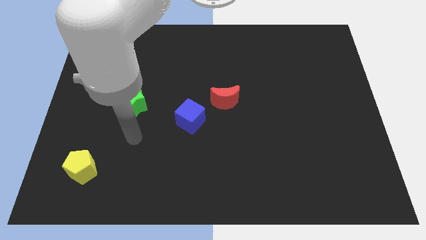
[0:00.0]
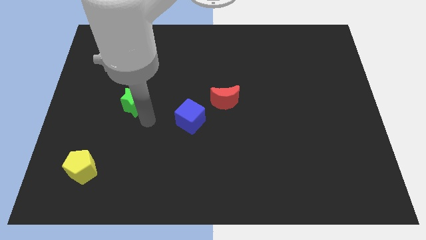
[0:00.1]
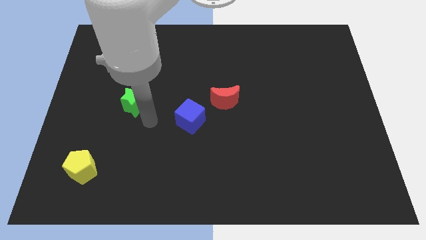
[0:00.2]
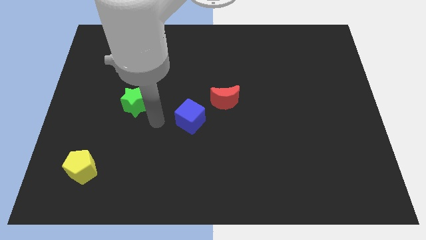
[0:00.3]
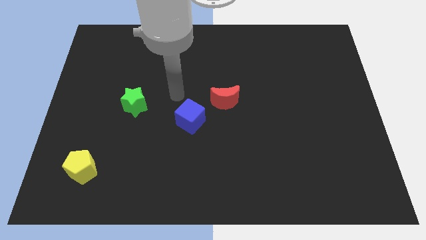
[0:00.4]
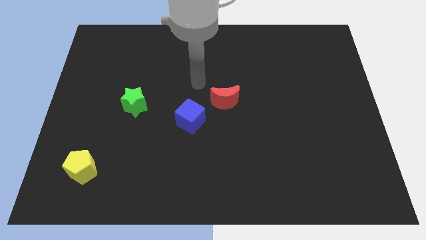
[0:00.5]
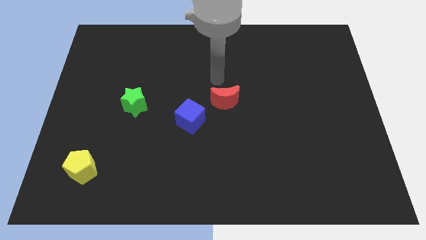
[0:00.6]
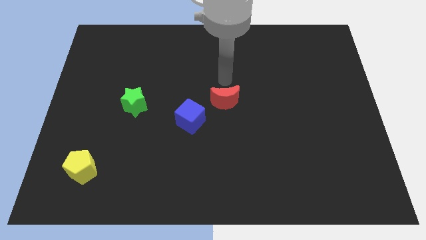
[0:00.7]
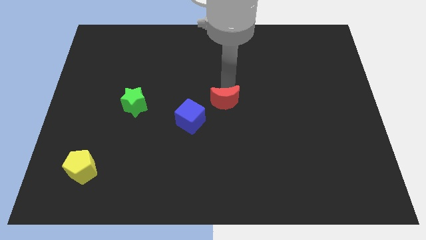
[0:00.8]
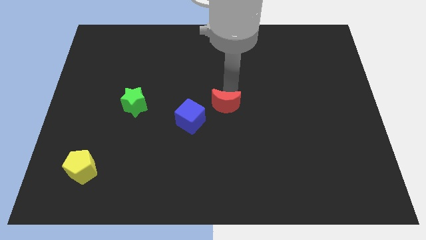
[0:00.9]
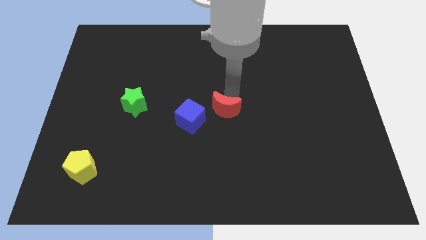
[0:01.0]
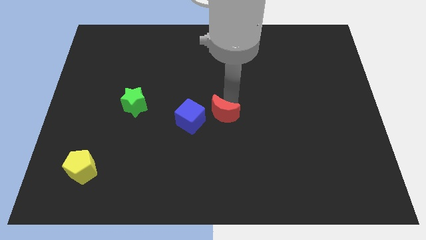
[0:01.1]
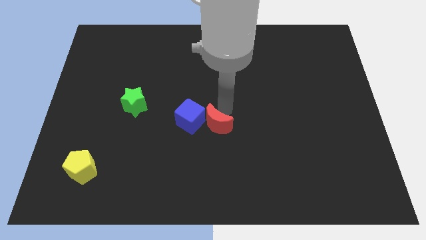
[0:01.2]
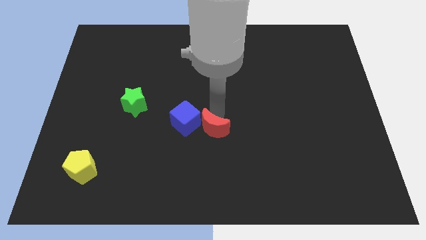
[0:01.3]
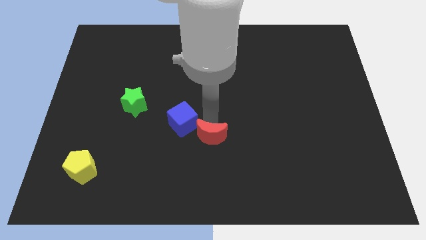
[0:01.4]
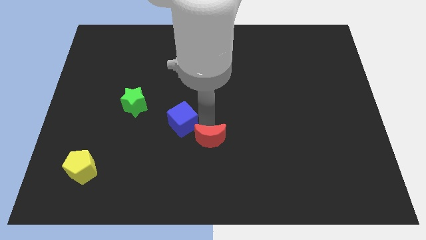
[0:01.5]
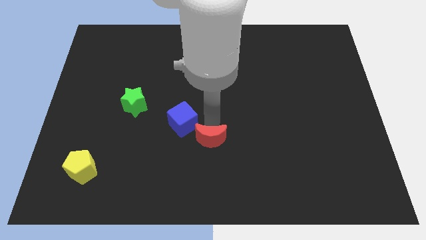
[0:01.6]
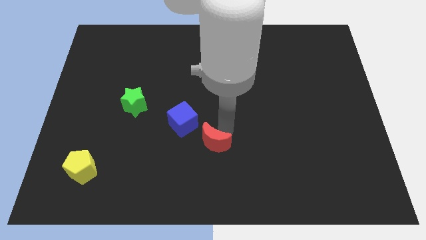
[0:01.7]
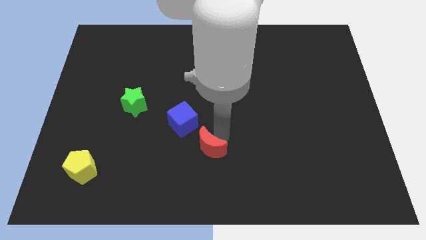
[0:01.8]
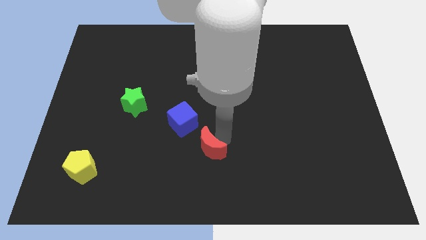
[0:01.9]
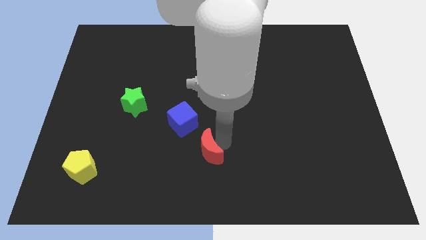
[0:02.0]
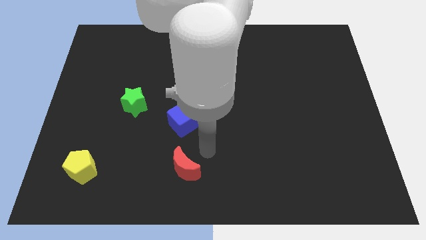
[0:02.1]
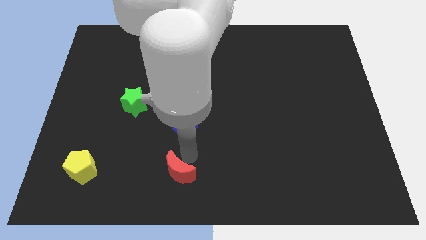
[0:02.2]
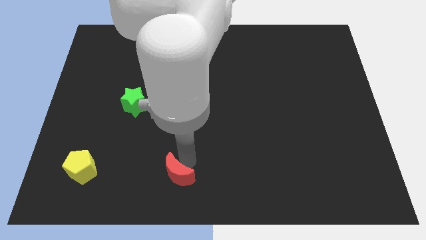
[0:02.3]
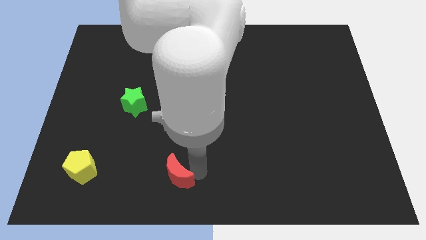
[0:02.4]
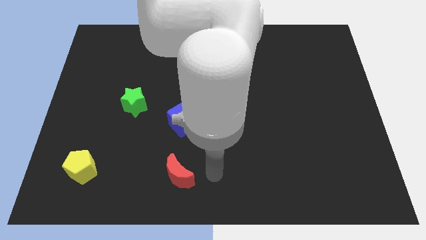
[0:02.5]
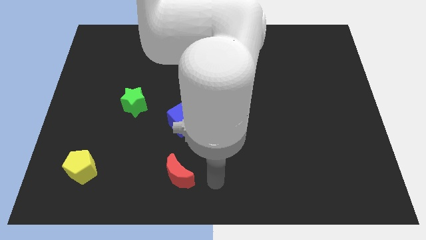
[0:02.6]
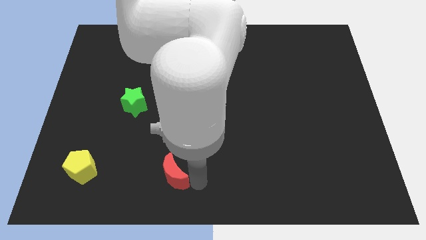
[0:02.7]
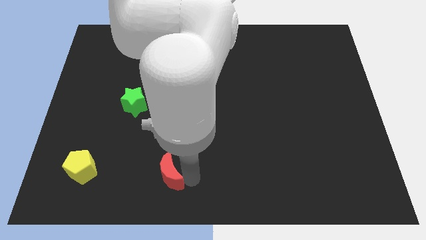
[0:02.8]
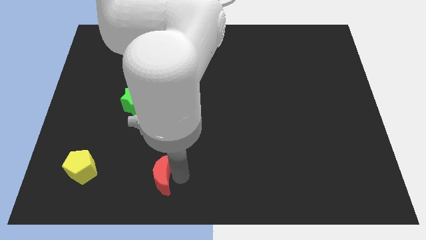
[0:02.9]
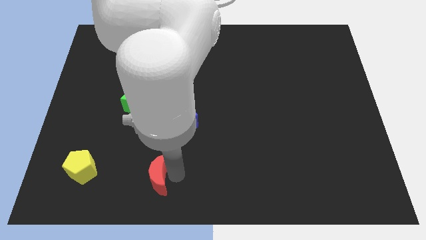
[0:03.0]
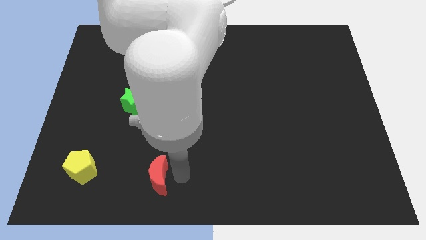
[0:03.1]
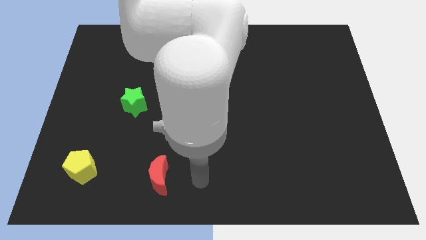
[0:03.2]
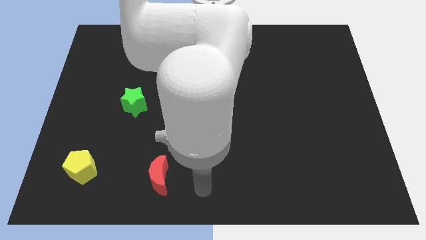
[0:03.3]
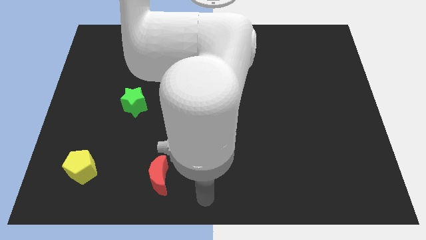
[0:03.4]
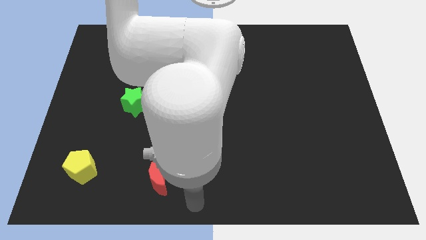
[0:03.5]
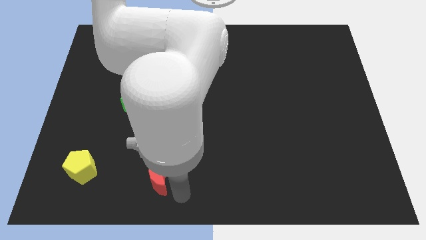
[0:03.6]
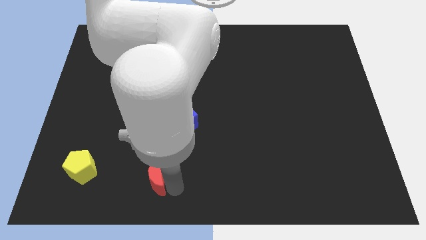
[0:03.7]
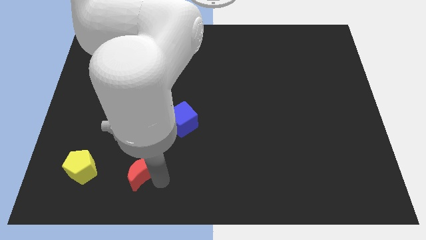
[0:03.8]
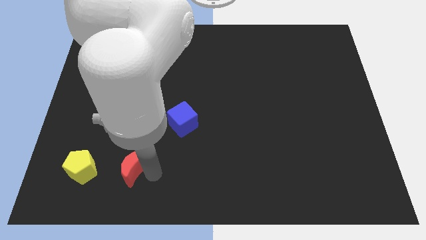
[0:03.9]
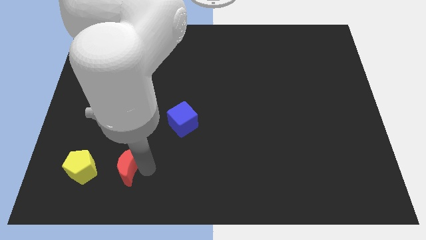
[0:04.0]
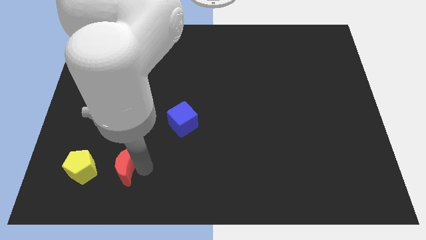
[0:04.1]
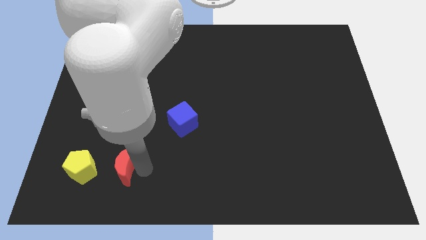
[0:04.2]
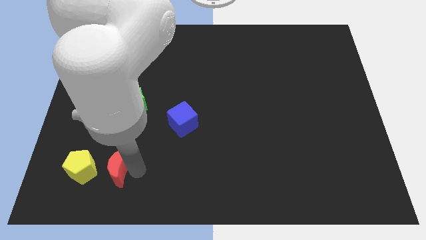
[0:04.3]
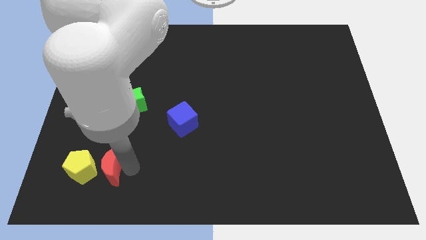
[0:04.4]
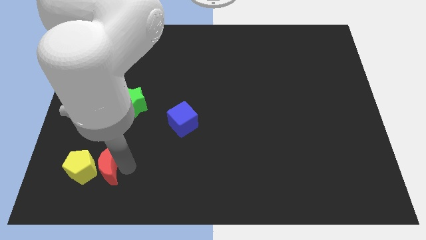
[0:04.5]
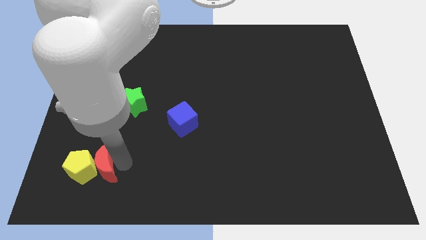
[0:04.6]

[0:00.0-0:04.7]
slide the red block to the yellow pentagon

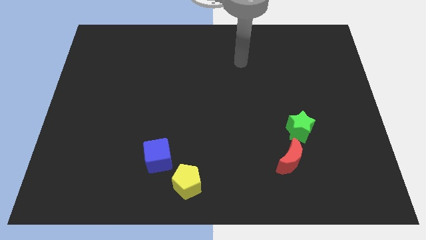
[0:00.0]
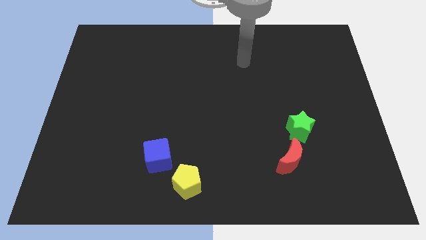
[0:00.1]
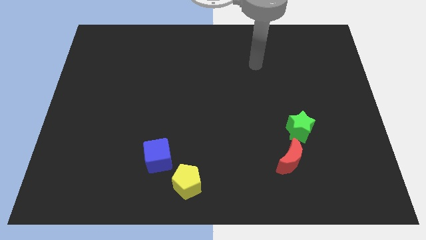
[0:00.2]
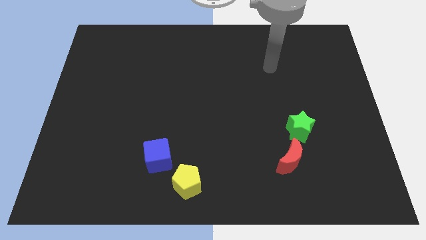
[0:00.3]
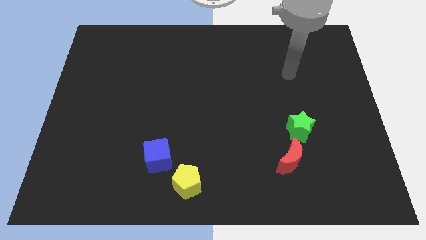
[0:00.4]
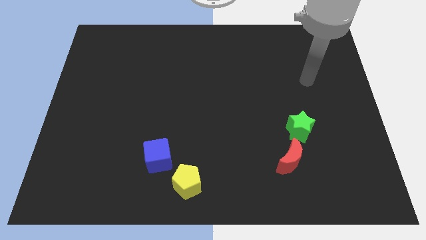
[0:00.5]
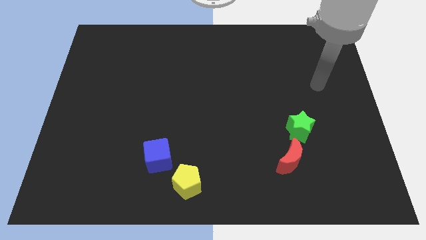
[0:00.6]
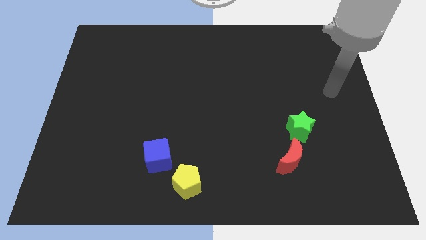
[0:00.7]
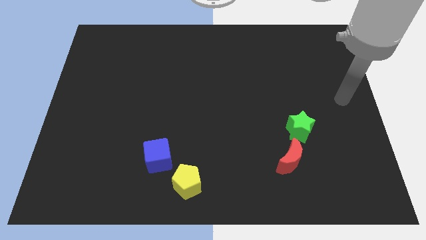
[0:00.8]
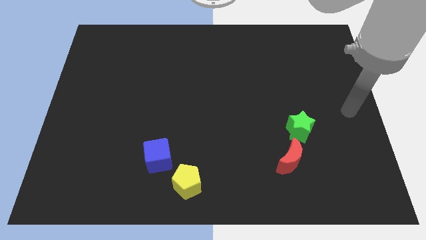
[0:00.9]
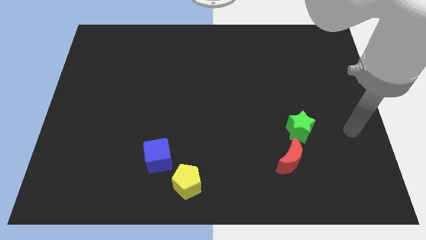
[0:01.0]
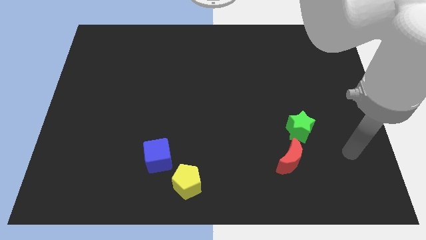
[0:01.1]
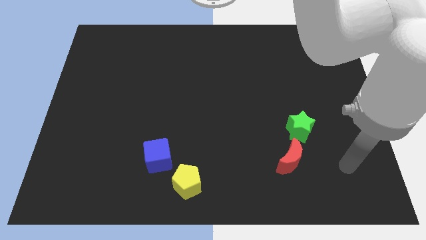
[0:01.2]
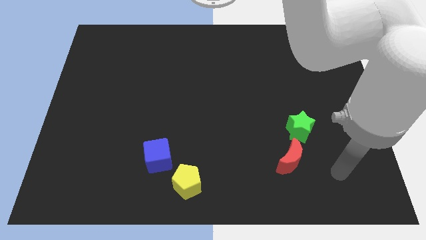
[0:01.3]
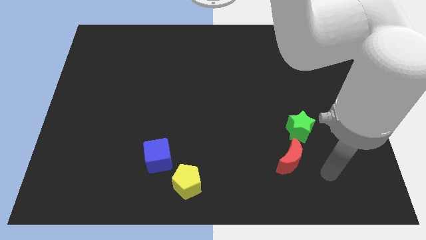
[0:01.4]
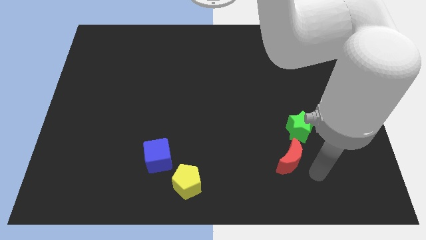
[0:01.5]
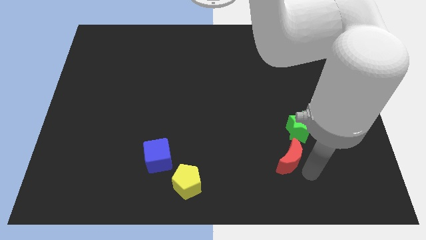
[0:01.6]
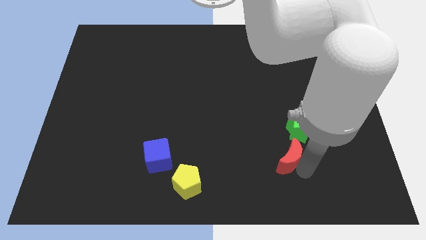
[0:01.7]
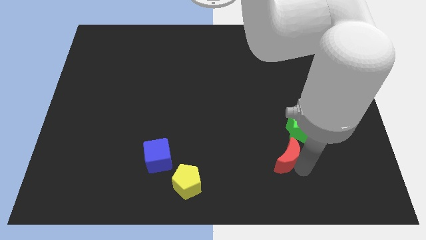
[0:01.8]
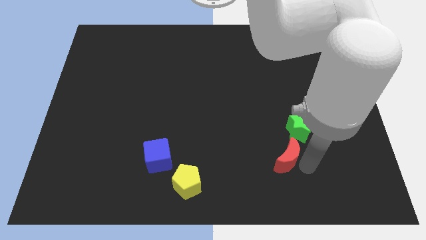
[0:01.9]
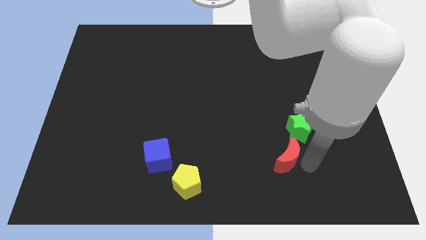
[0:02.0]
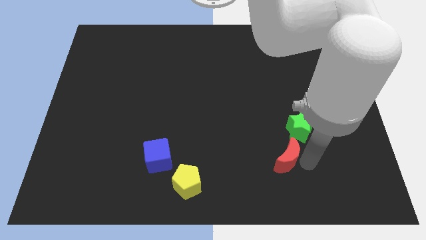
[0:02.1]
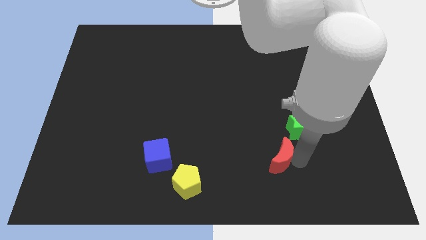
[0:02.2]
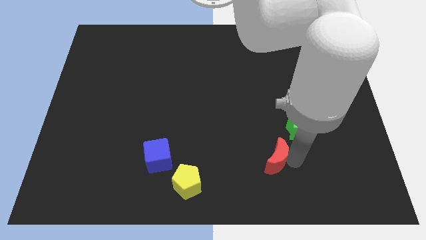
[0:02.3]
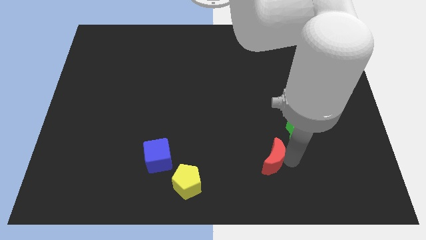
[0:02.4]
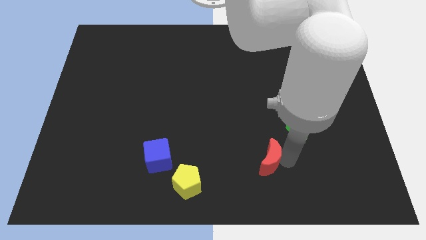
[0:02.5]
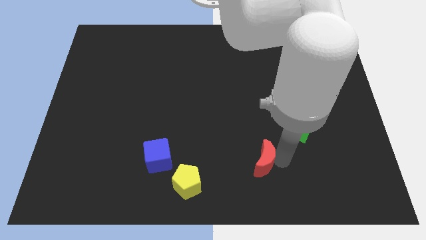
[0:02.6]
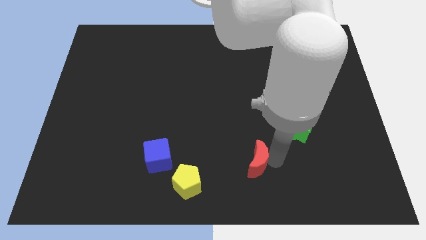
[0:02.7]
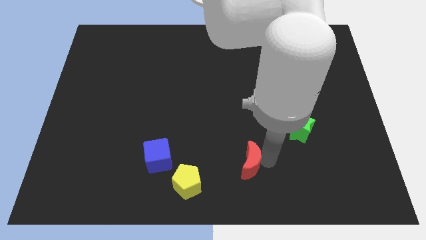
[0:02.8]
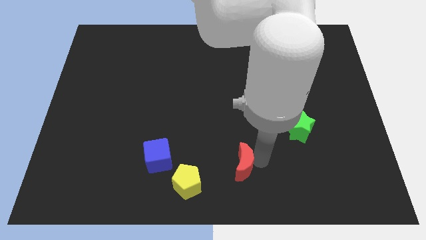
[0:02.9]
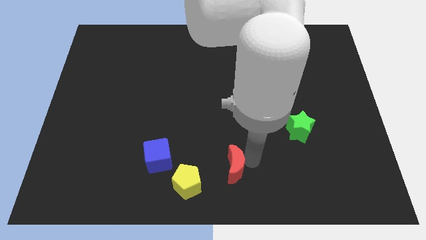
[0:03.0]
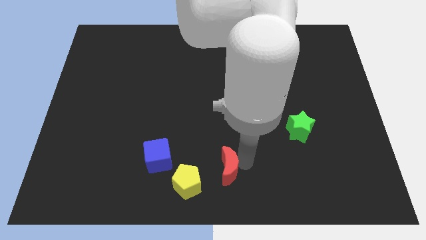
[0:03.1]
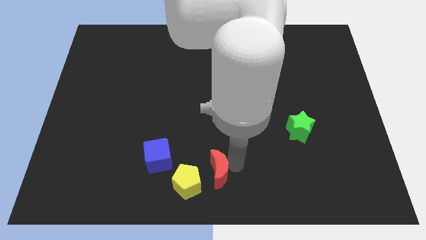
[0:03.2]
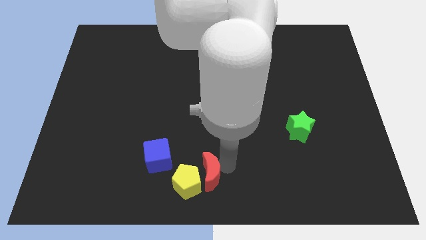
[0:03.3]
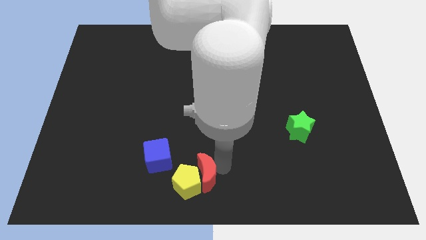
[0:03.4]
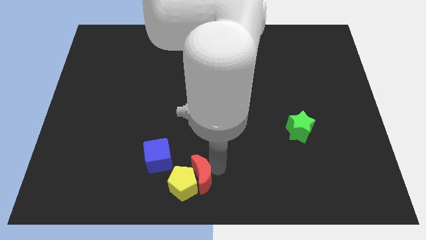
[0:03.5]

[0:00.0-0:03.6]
slide the red block to the pentagon

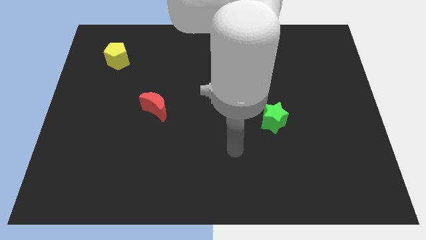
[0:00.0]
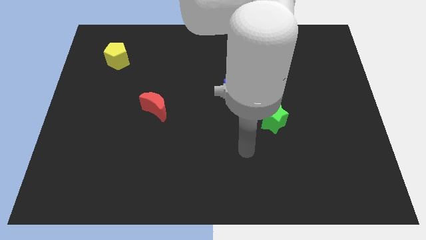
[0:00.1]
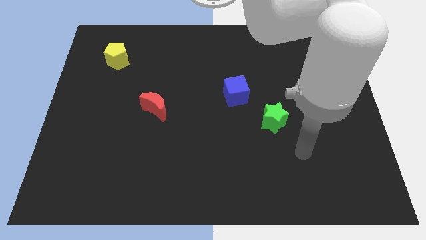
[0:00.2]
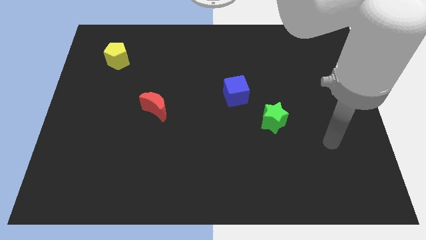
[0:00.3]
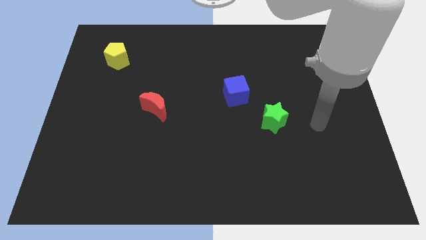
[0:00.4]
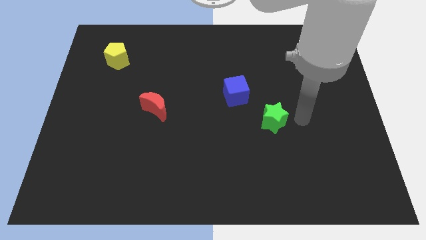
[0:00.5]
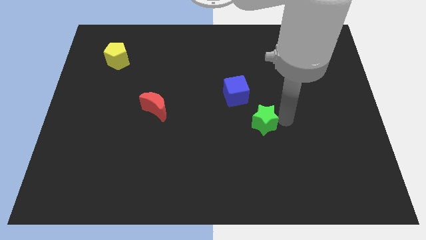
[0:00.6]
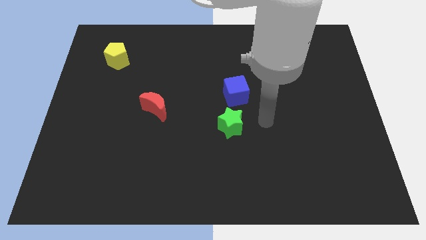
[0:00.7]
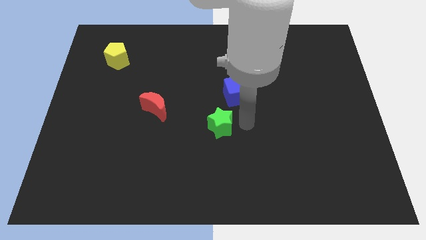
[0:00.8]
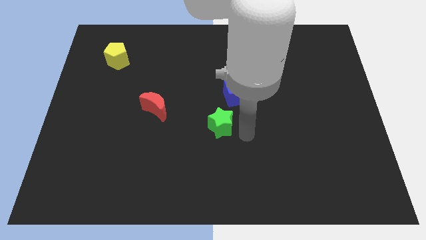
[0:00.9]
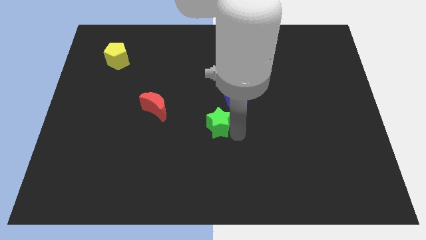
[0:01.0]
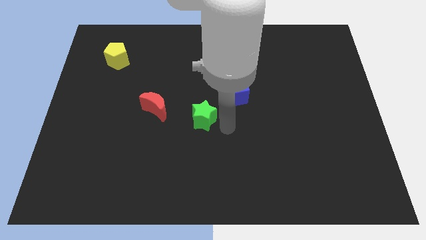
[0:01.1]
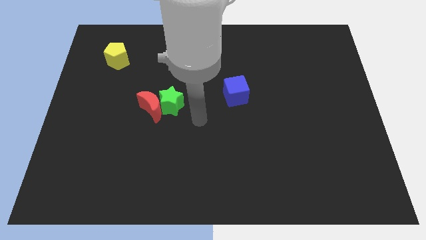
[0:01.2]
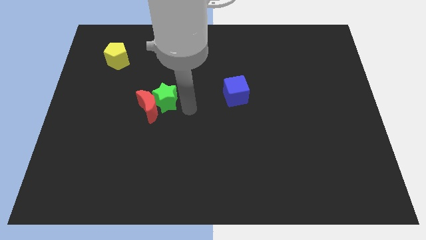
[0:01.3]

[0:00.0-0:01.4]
slide the green star next to the red block
